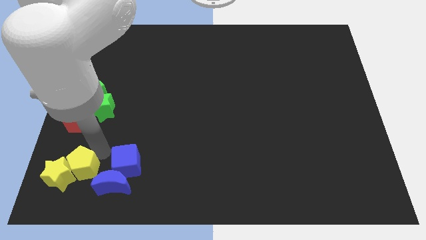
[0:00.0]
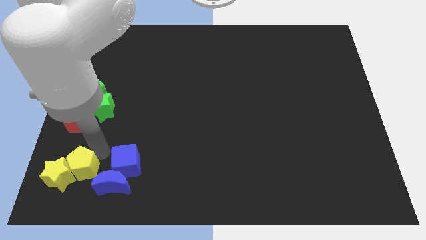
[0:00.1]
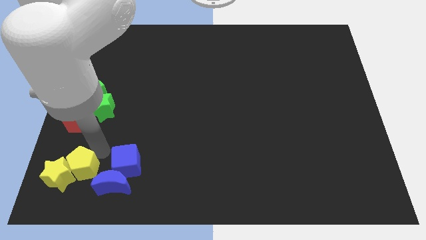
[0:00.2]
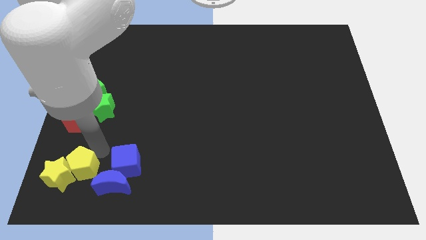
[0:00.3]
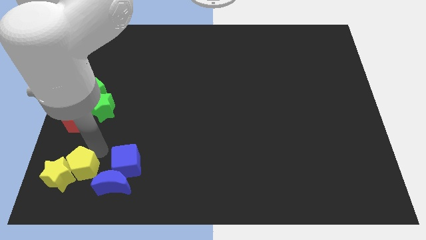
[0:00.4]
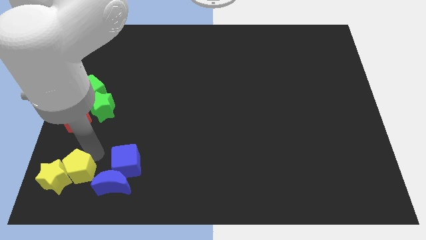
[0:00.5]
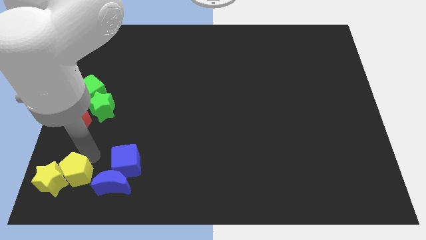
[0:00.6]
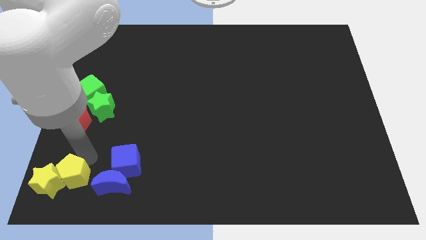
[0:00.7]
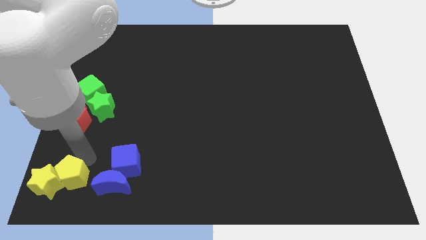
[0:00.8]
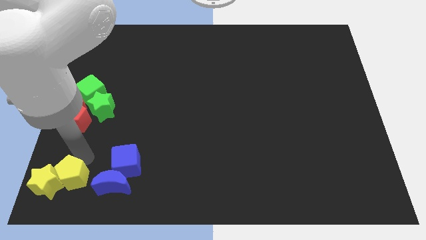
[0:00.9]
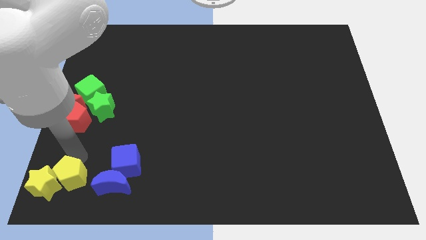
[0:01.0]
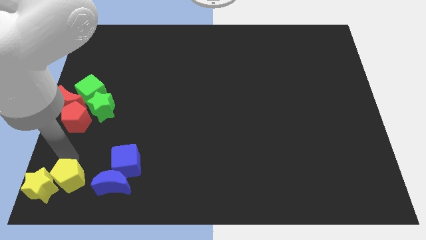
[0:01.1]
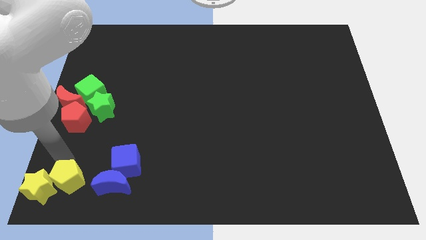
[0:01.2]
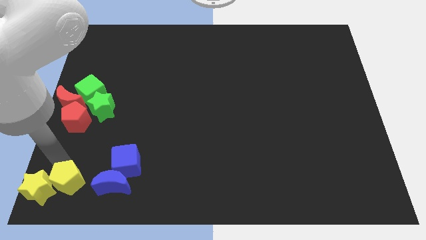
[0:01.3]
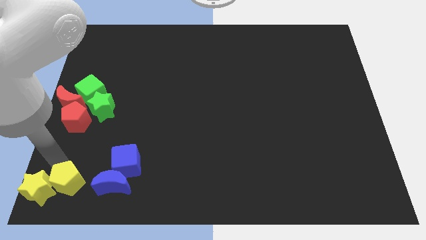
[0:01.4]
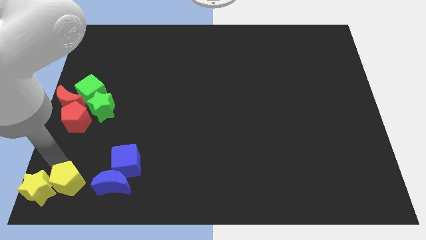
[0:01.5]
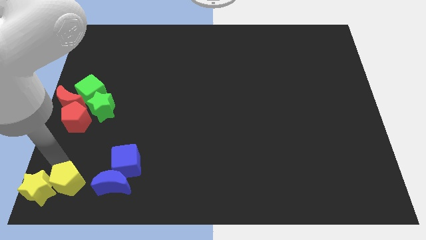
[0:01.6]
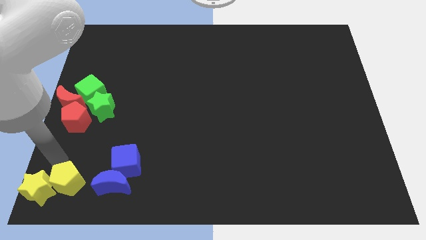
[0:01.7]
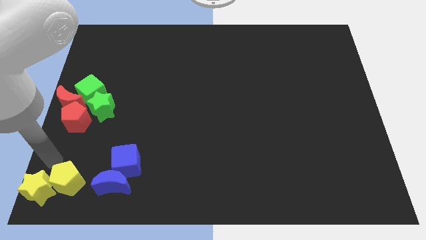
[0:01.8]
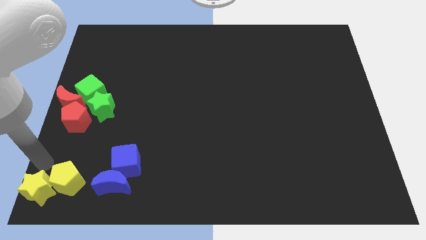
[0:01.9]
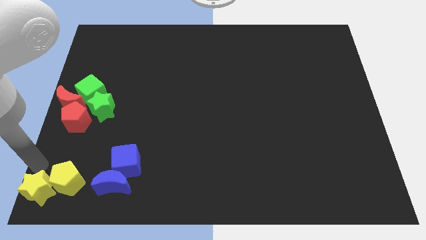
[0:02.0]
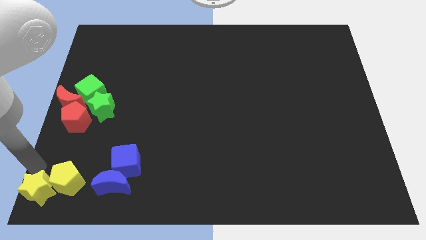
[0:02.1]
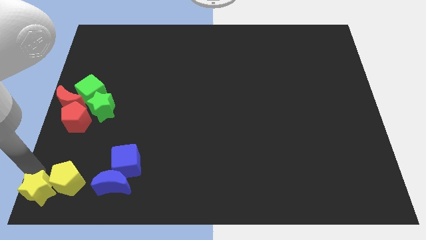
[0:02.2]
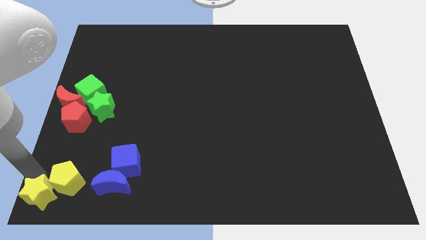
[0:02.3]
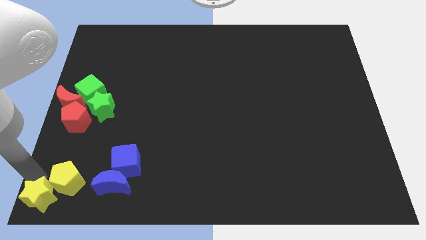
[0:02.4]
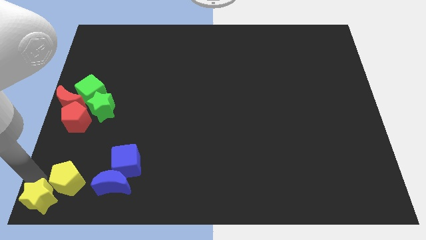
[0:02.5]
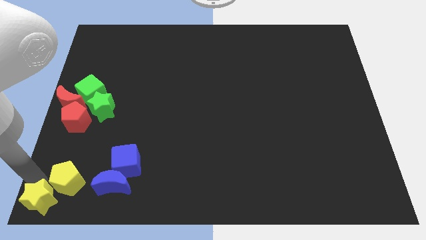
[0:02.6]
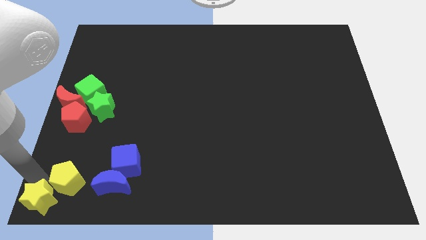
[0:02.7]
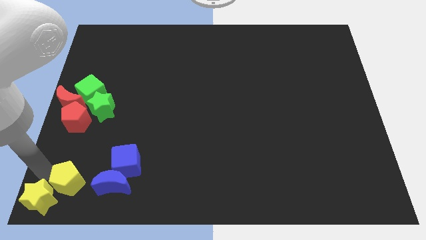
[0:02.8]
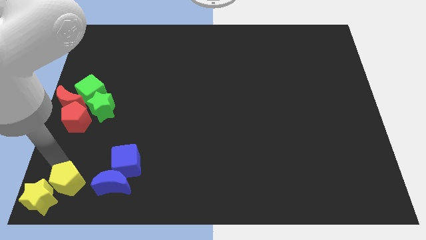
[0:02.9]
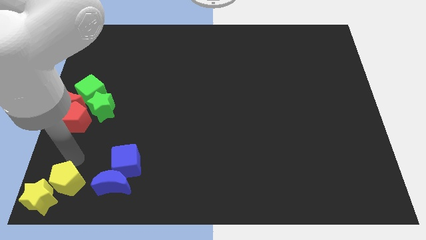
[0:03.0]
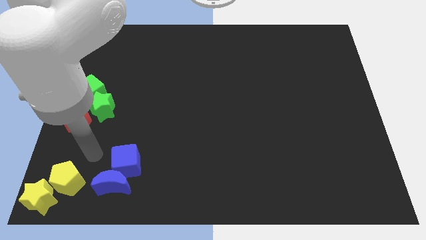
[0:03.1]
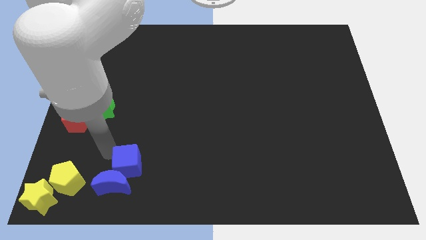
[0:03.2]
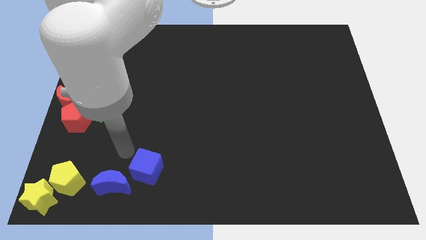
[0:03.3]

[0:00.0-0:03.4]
push the yellow blocks to the bottom left of the board

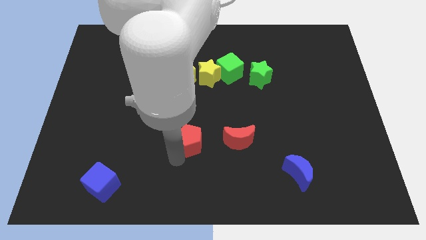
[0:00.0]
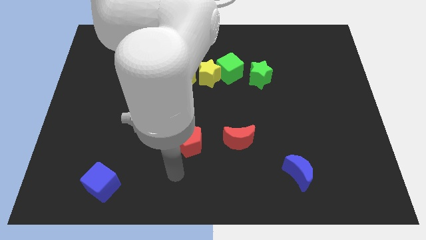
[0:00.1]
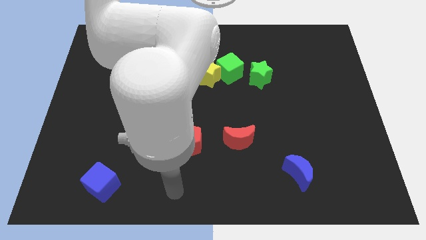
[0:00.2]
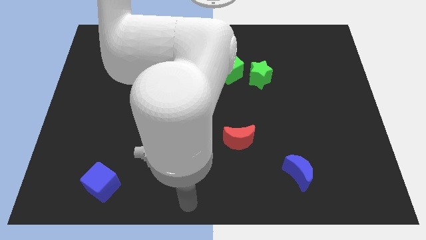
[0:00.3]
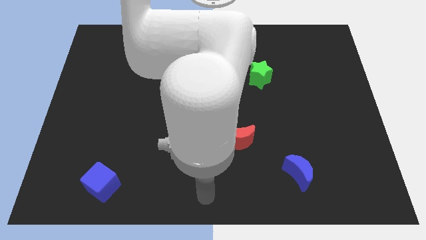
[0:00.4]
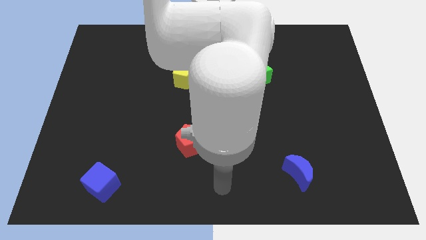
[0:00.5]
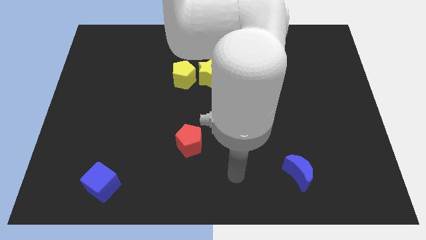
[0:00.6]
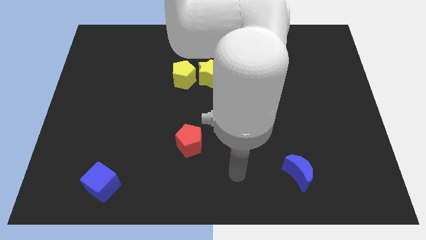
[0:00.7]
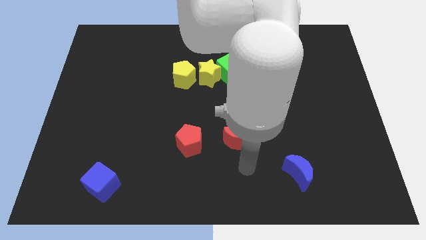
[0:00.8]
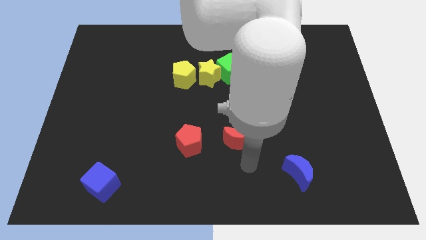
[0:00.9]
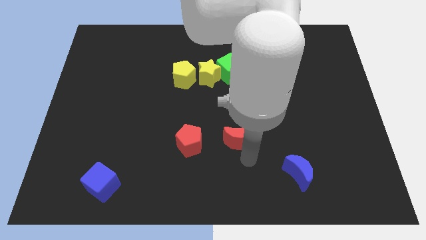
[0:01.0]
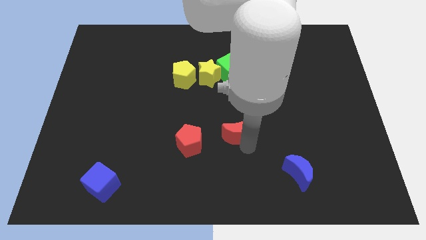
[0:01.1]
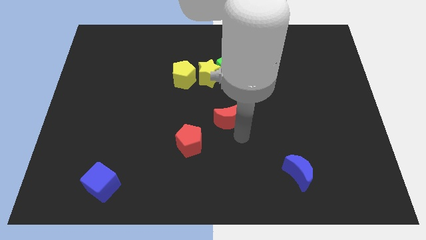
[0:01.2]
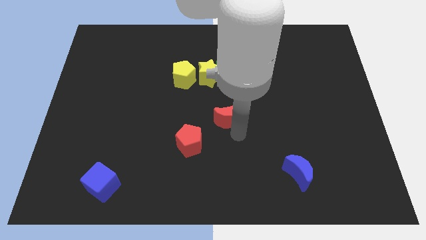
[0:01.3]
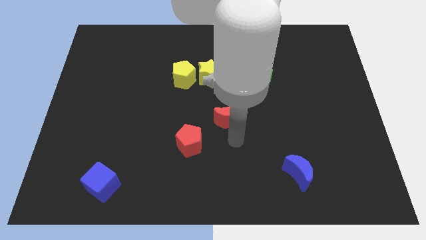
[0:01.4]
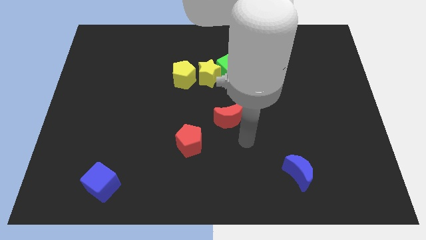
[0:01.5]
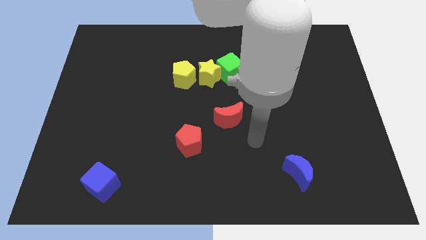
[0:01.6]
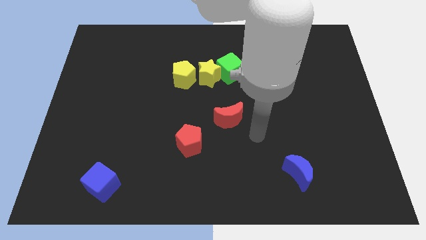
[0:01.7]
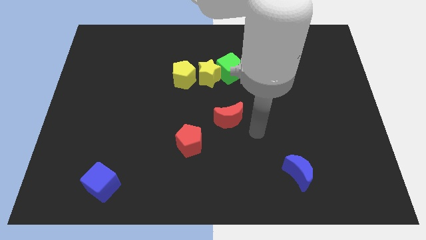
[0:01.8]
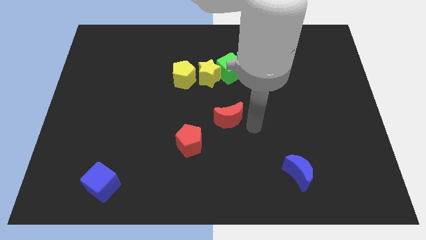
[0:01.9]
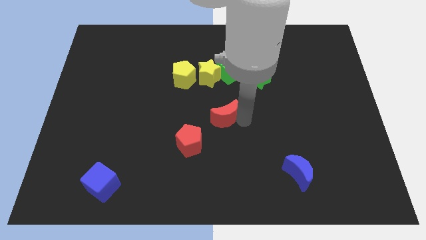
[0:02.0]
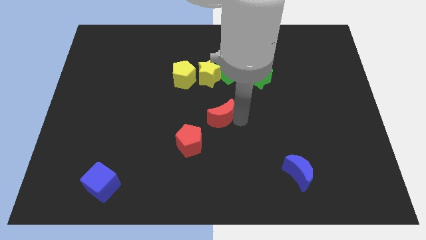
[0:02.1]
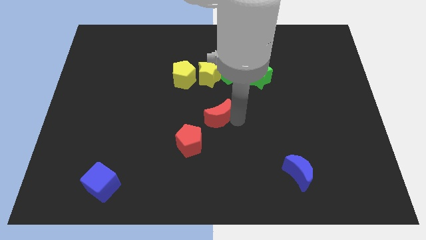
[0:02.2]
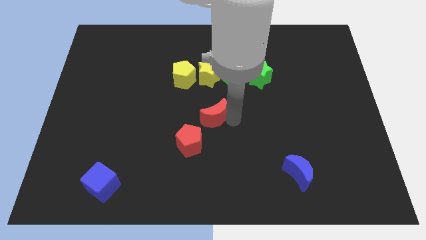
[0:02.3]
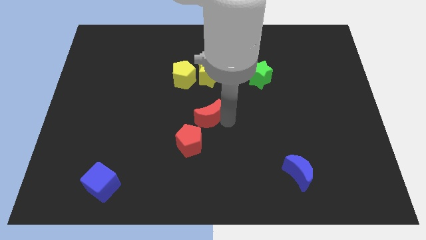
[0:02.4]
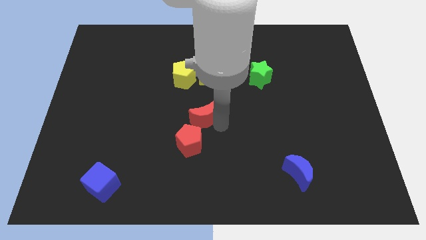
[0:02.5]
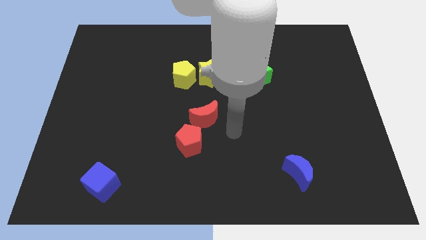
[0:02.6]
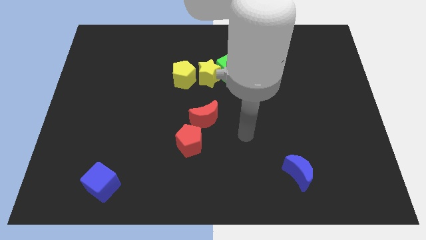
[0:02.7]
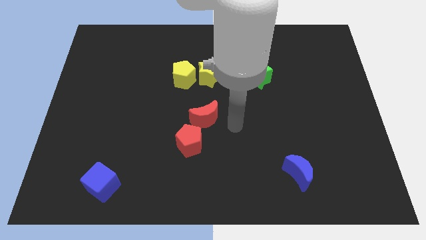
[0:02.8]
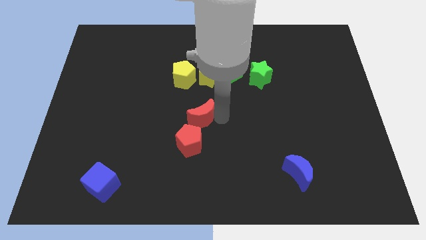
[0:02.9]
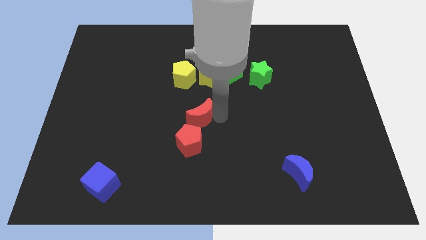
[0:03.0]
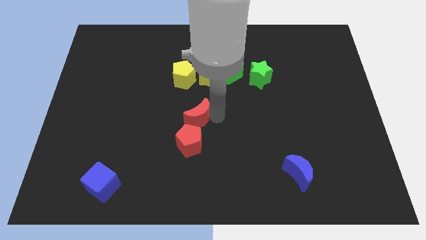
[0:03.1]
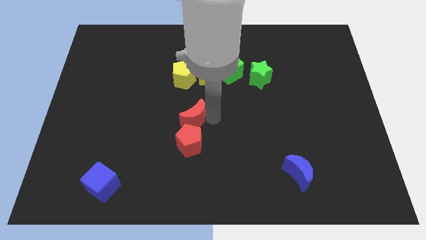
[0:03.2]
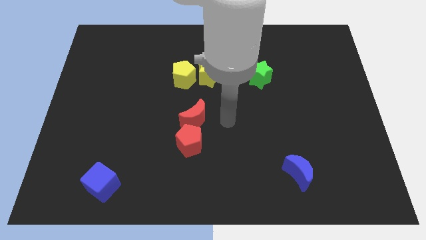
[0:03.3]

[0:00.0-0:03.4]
push the red crescent towards the top of red pentagon

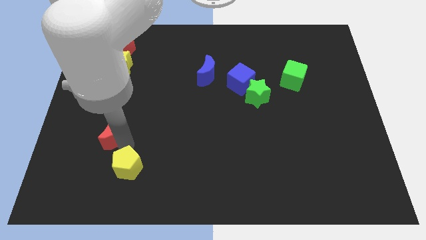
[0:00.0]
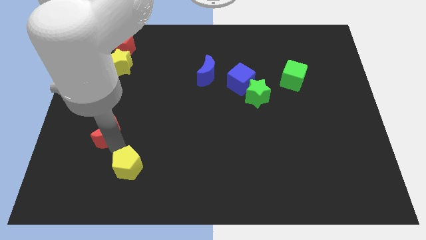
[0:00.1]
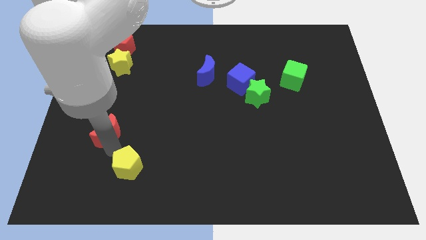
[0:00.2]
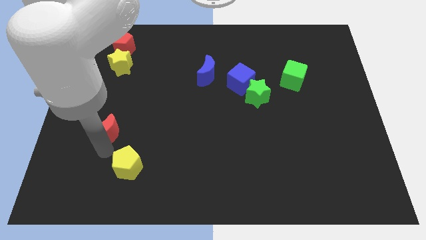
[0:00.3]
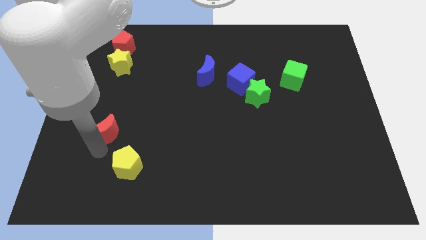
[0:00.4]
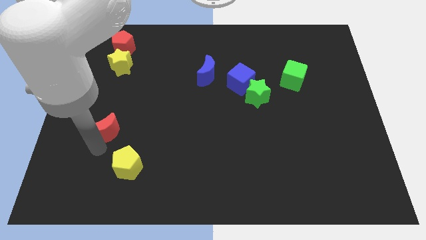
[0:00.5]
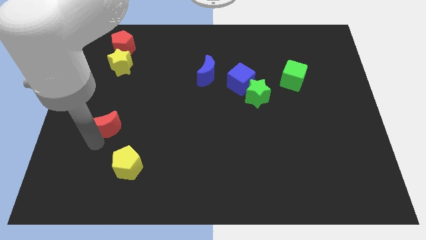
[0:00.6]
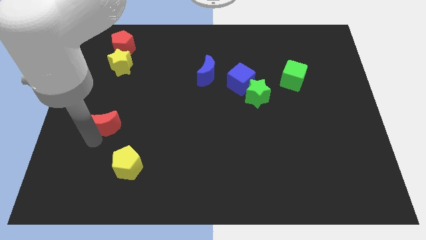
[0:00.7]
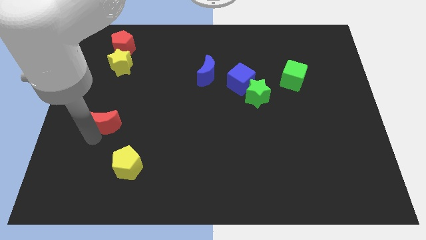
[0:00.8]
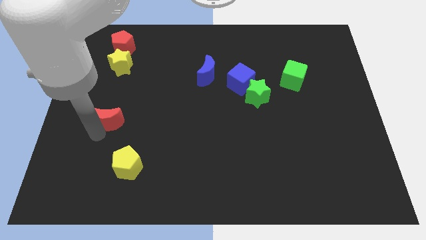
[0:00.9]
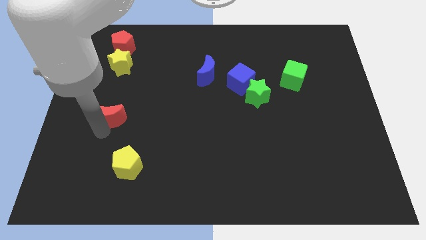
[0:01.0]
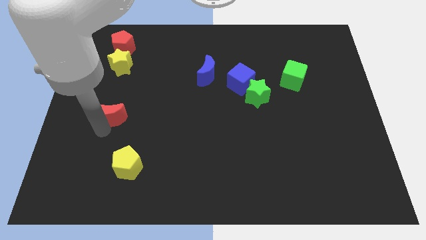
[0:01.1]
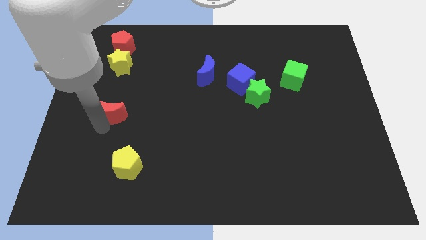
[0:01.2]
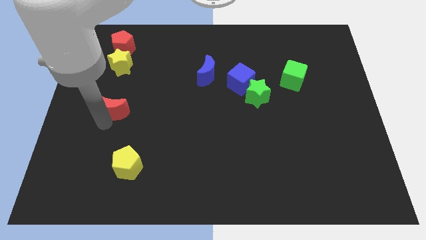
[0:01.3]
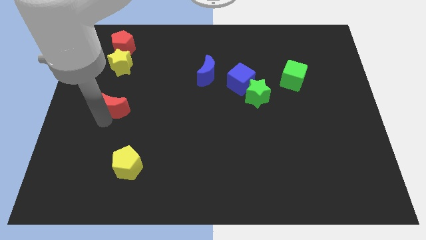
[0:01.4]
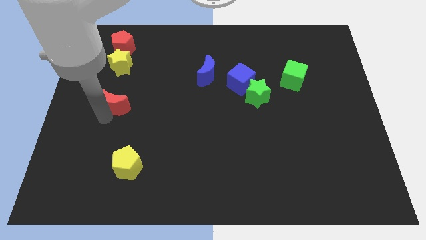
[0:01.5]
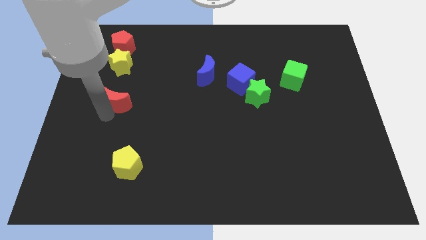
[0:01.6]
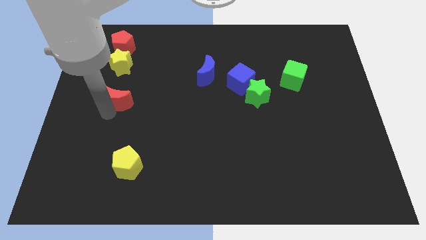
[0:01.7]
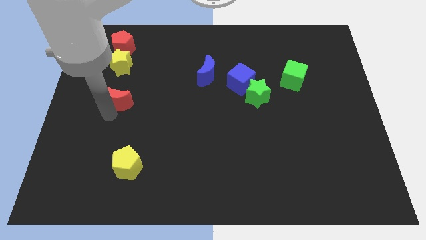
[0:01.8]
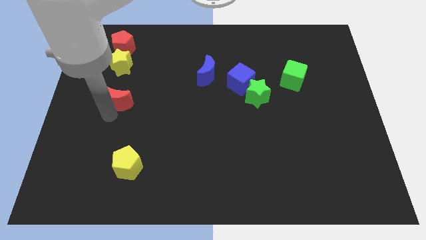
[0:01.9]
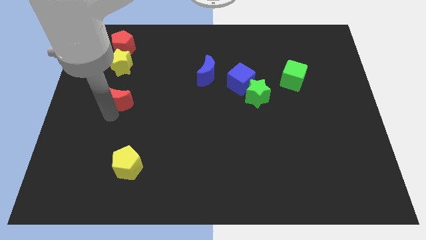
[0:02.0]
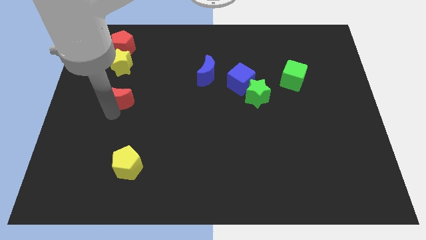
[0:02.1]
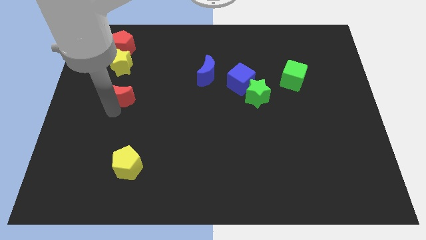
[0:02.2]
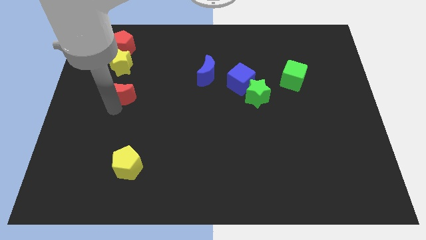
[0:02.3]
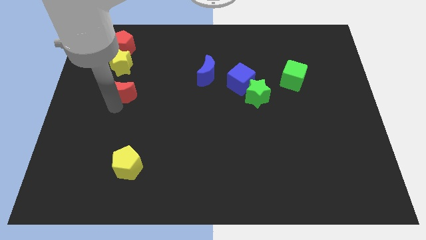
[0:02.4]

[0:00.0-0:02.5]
push the red moon upwarda
